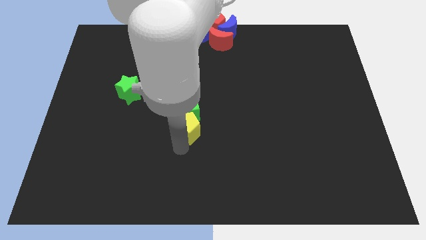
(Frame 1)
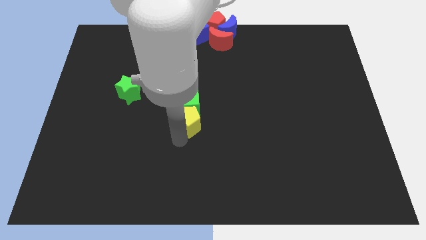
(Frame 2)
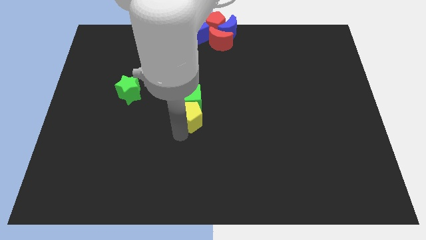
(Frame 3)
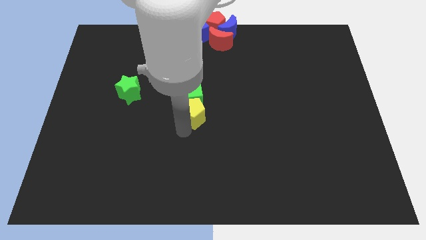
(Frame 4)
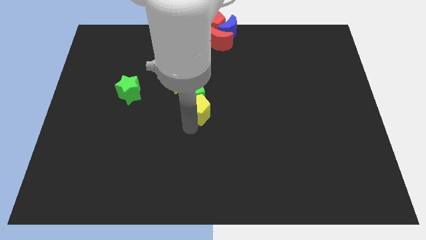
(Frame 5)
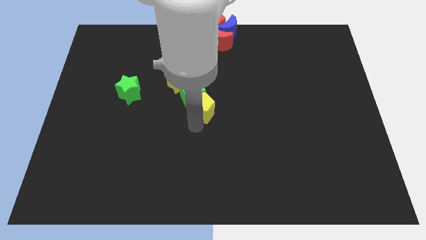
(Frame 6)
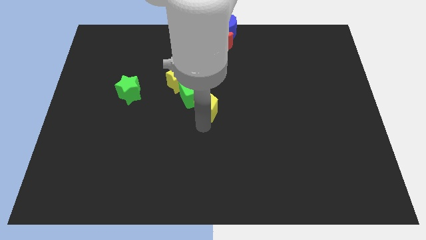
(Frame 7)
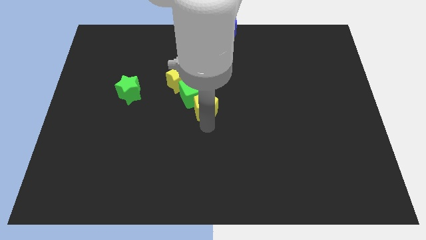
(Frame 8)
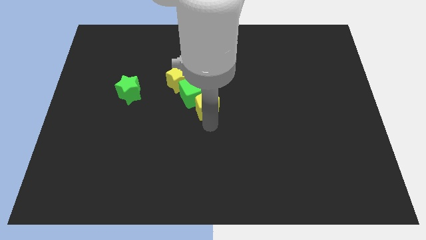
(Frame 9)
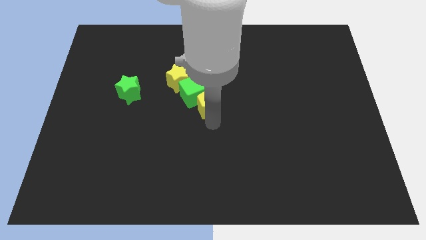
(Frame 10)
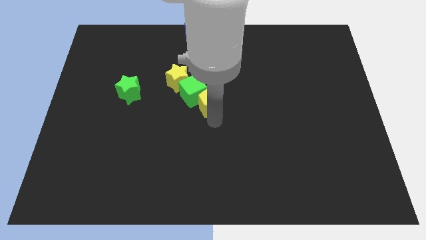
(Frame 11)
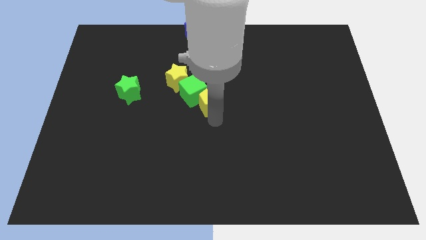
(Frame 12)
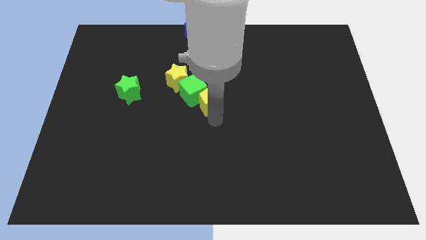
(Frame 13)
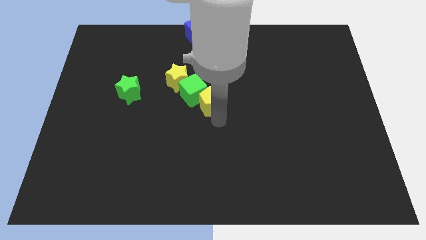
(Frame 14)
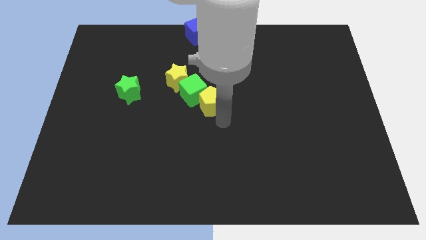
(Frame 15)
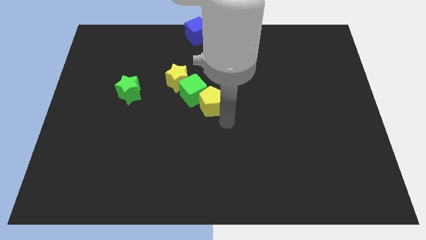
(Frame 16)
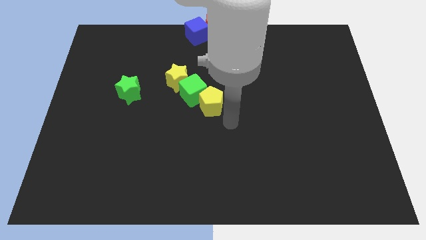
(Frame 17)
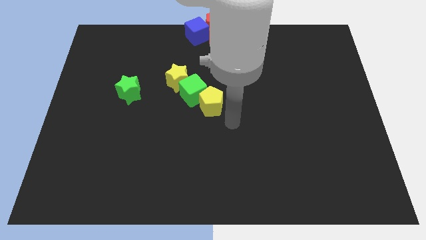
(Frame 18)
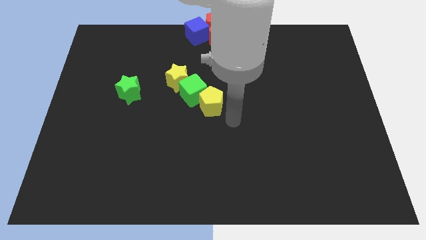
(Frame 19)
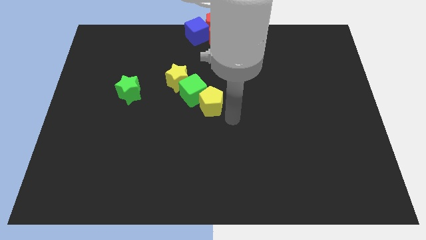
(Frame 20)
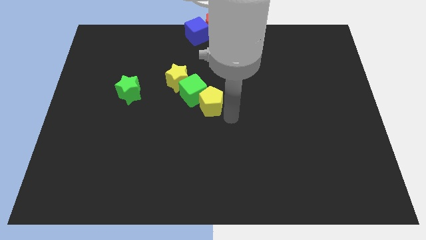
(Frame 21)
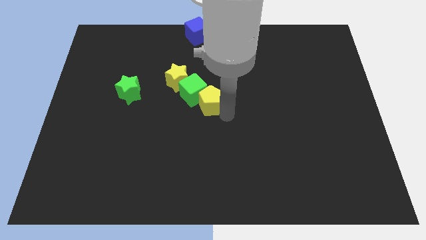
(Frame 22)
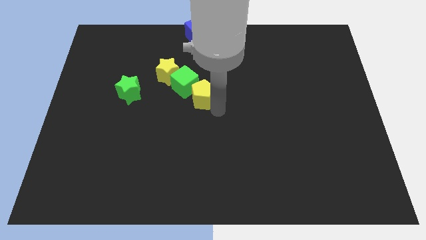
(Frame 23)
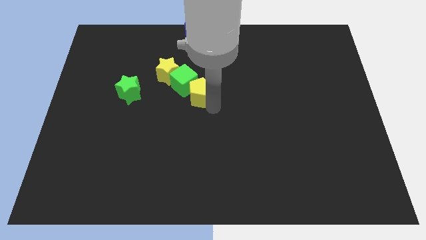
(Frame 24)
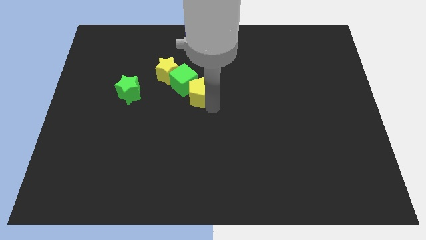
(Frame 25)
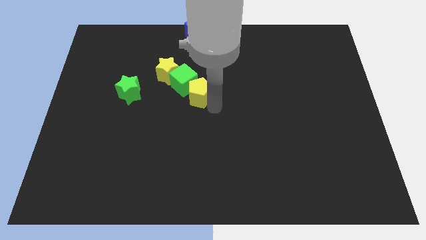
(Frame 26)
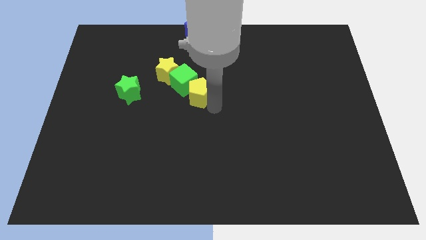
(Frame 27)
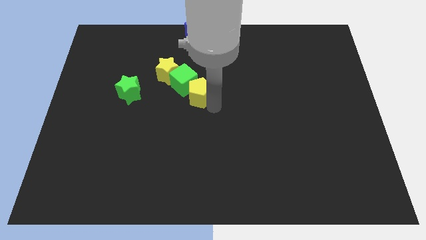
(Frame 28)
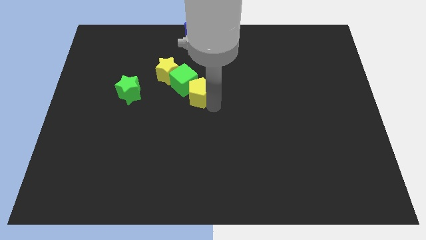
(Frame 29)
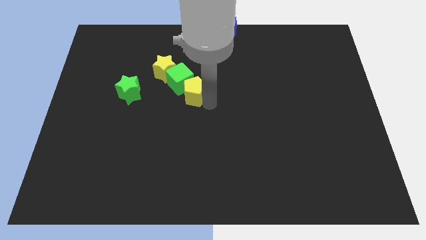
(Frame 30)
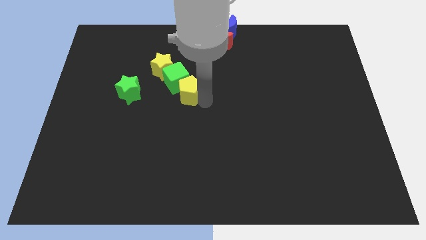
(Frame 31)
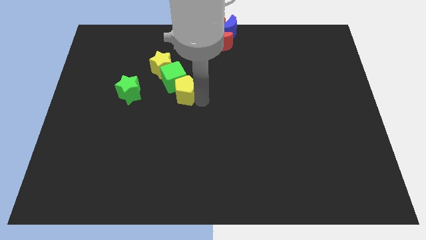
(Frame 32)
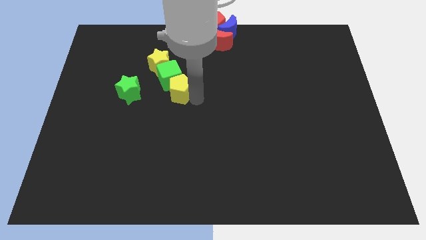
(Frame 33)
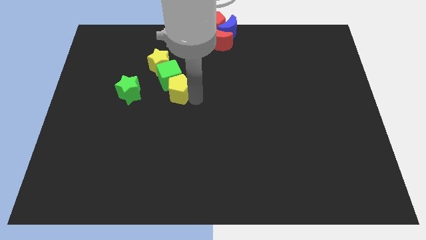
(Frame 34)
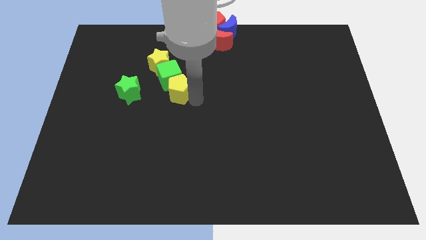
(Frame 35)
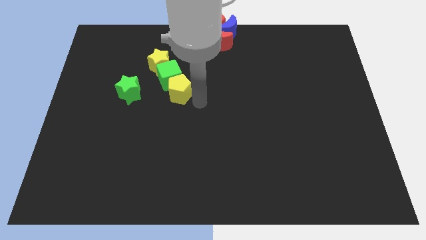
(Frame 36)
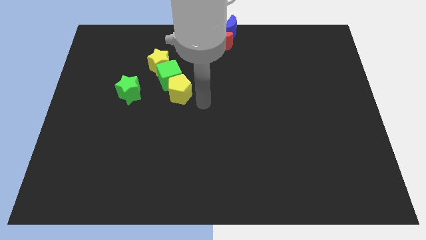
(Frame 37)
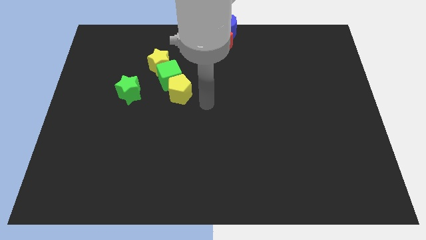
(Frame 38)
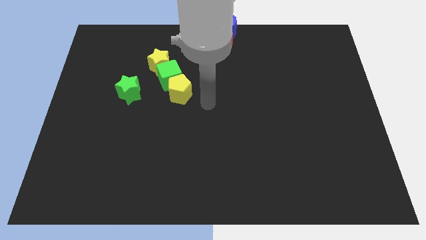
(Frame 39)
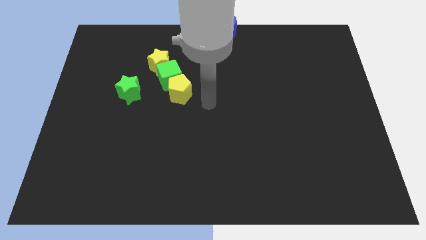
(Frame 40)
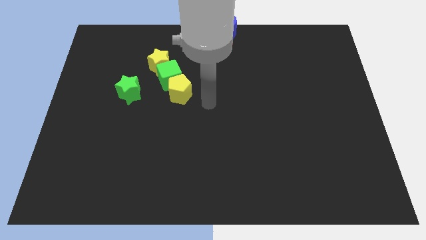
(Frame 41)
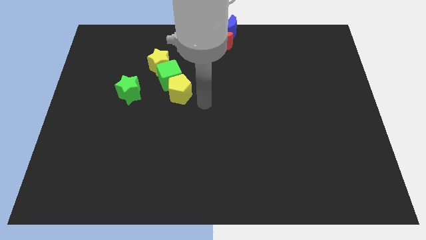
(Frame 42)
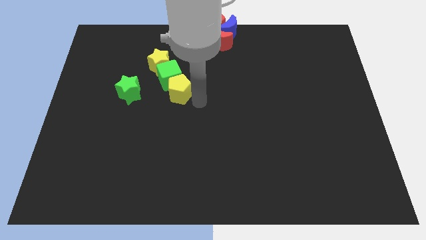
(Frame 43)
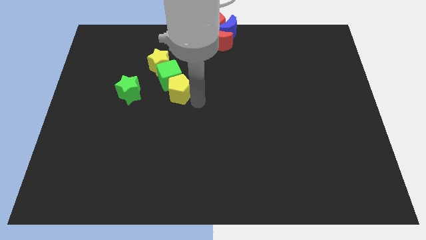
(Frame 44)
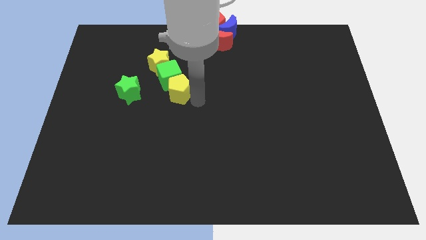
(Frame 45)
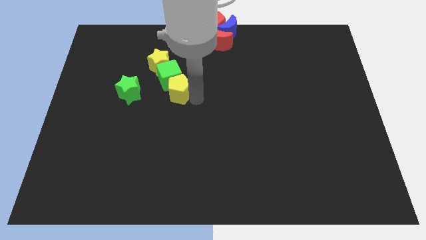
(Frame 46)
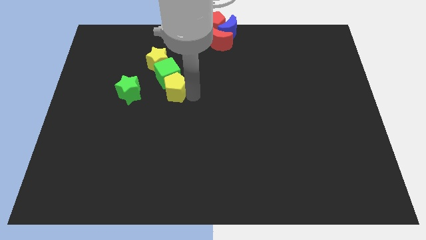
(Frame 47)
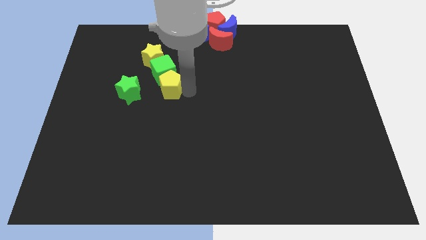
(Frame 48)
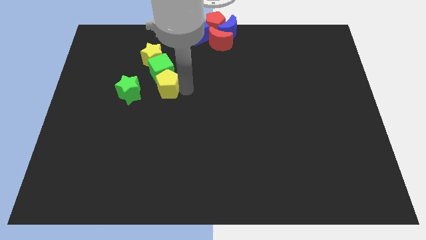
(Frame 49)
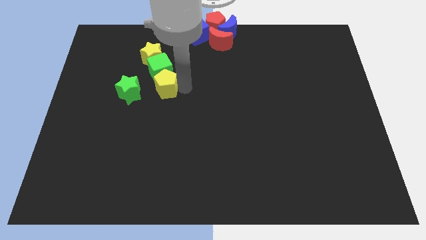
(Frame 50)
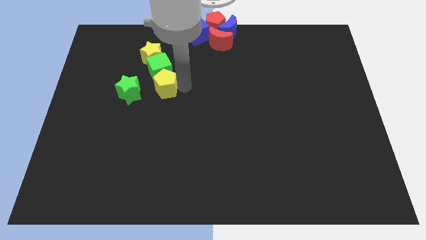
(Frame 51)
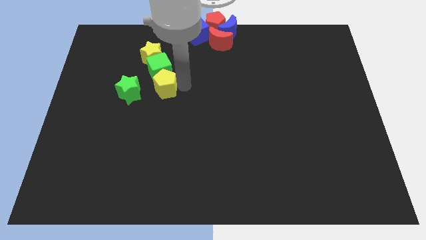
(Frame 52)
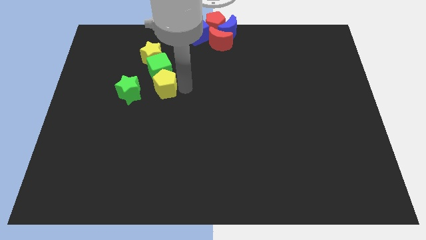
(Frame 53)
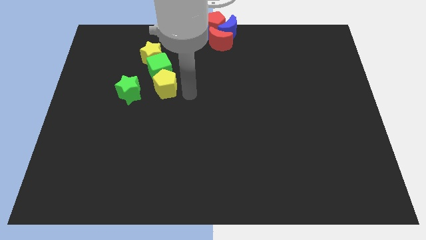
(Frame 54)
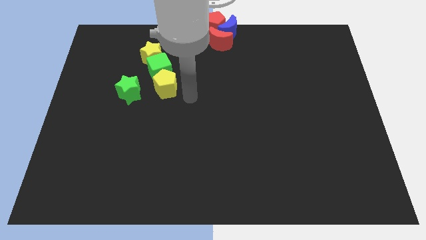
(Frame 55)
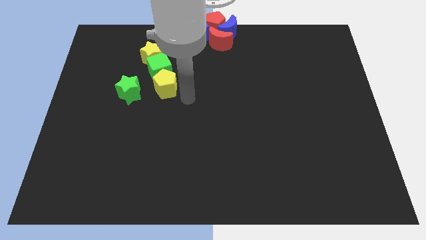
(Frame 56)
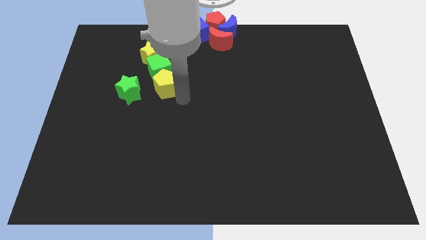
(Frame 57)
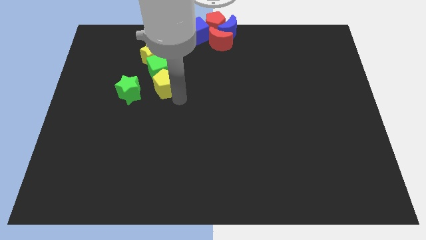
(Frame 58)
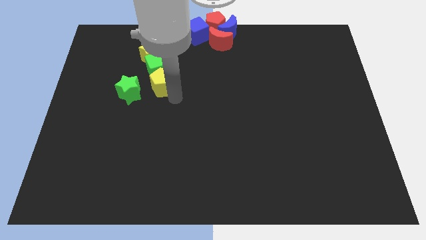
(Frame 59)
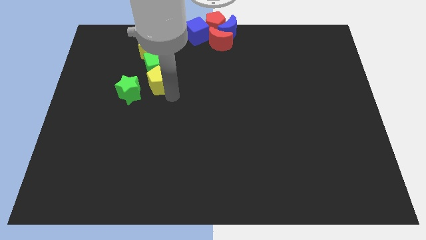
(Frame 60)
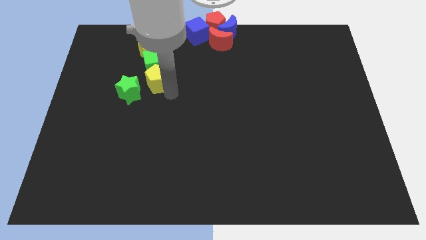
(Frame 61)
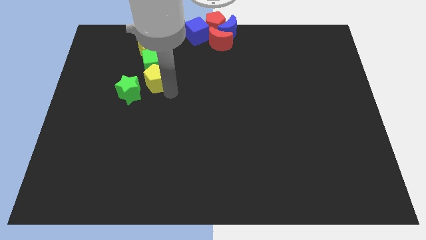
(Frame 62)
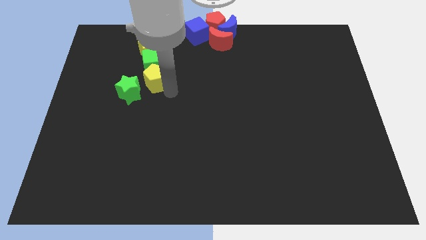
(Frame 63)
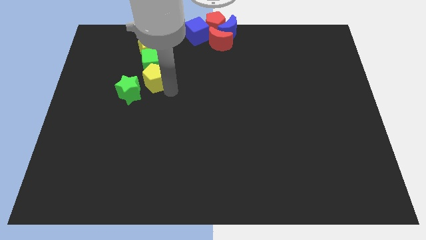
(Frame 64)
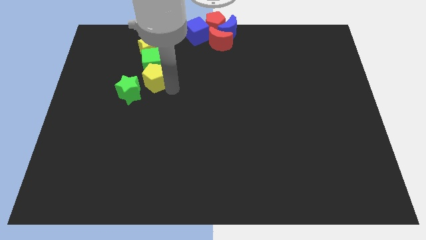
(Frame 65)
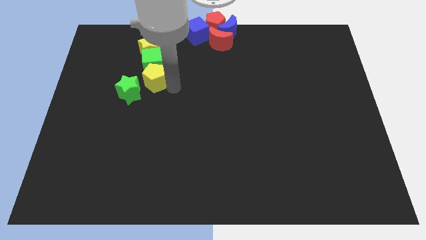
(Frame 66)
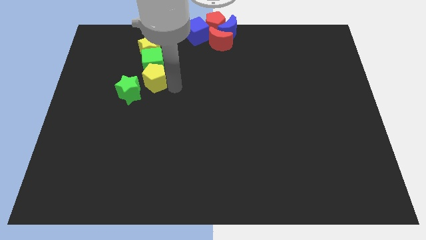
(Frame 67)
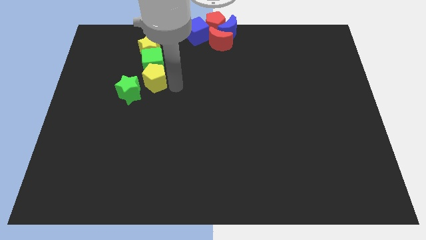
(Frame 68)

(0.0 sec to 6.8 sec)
move the line of blocks towards the top left side

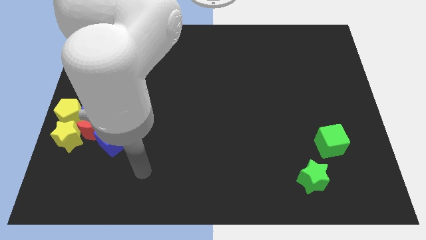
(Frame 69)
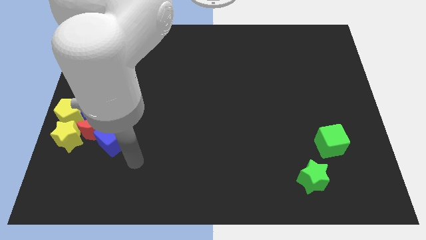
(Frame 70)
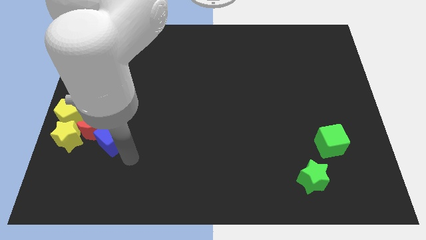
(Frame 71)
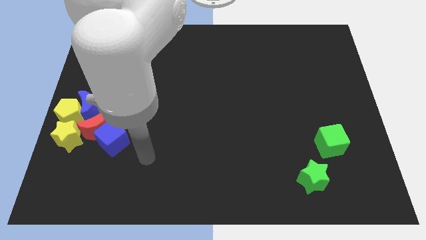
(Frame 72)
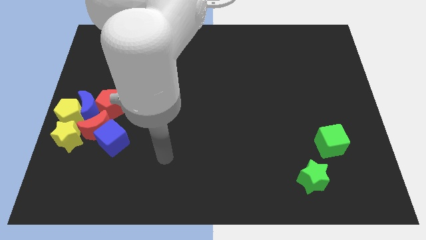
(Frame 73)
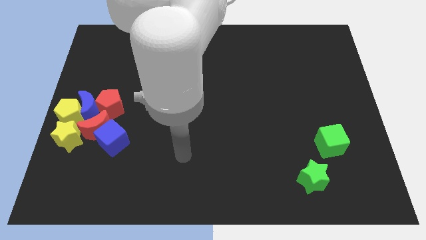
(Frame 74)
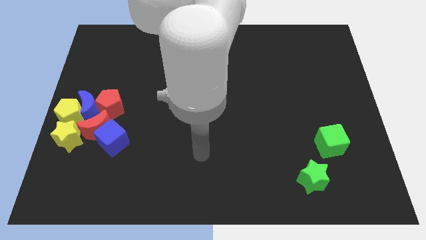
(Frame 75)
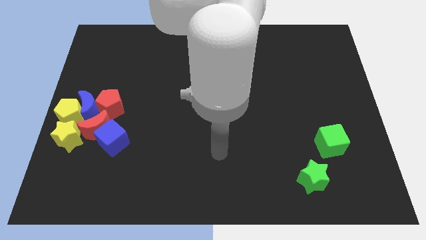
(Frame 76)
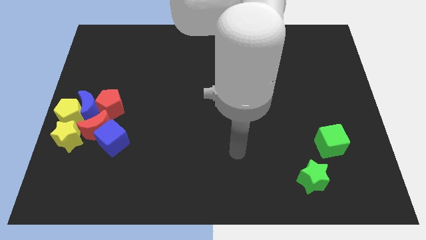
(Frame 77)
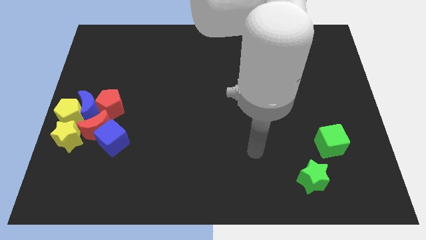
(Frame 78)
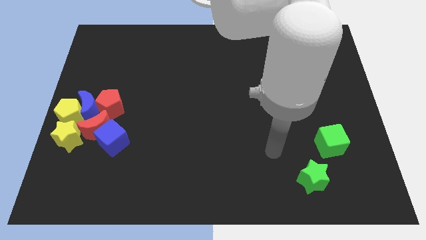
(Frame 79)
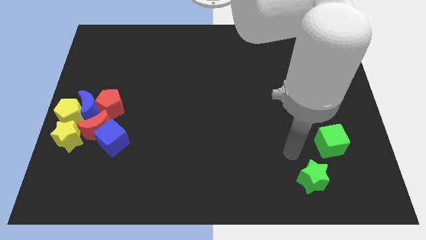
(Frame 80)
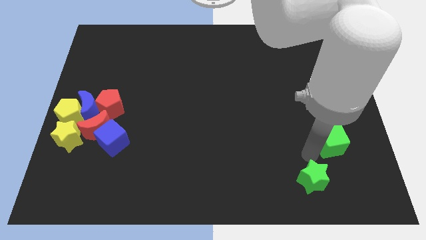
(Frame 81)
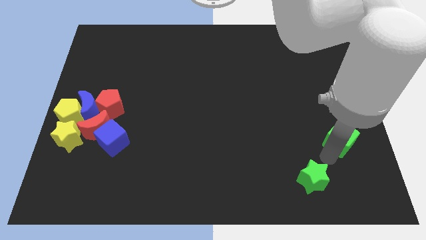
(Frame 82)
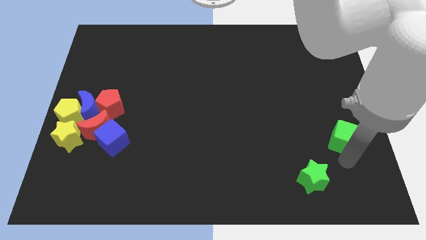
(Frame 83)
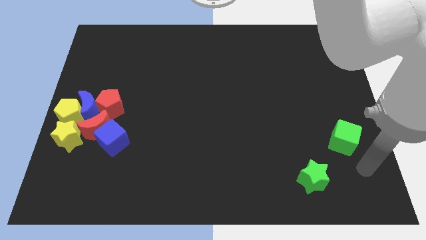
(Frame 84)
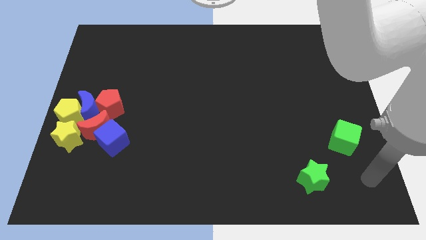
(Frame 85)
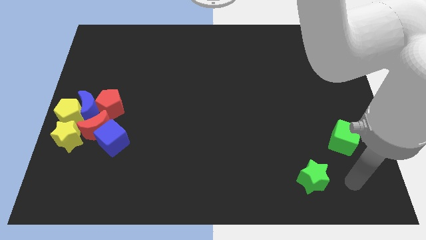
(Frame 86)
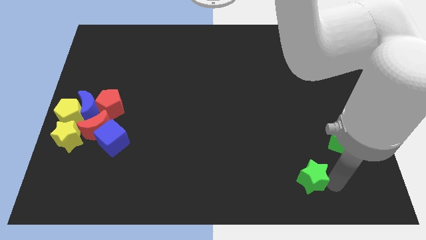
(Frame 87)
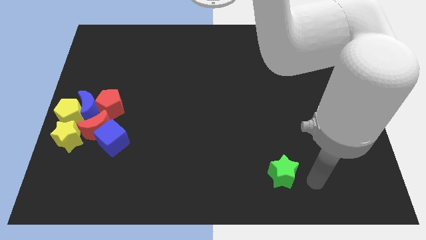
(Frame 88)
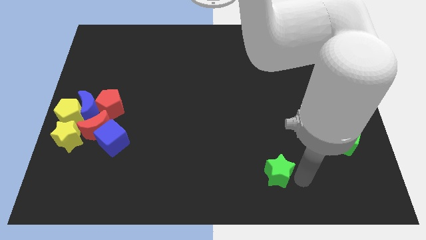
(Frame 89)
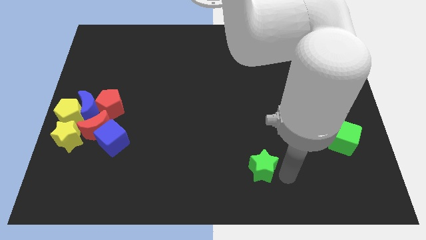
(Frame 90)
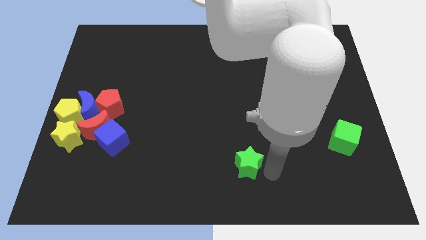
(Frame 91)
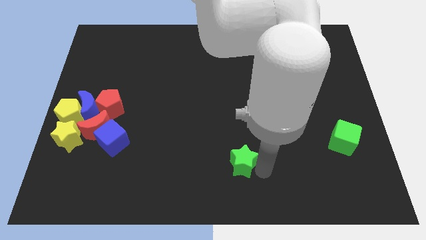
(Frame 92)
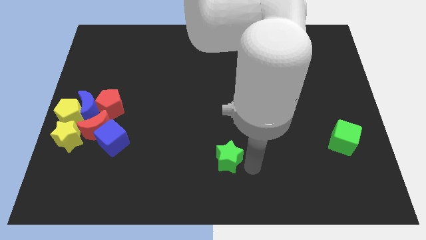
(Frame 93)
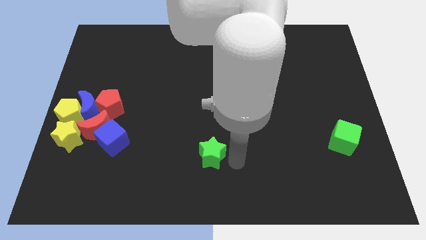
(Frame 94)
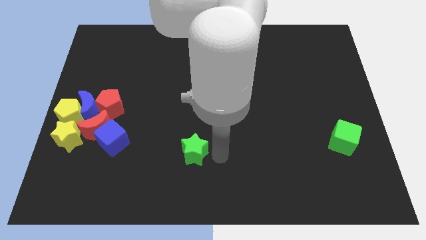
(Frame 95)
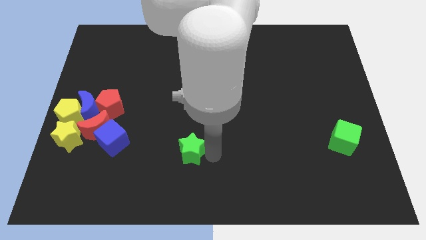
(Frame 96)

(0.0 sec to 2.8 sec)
take the green star towards the group of blocks
